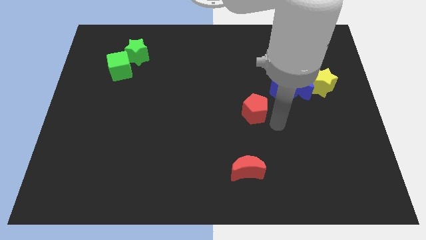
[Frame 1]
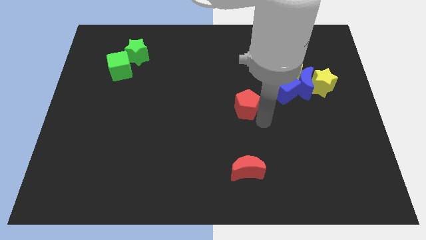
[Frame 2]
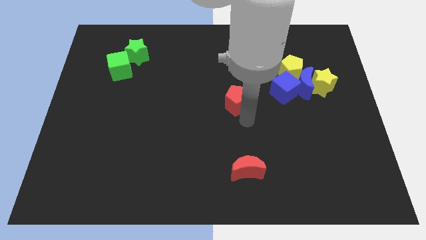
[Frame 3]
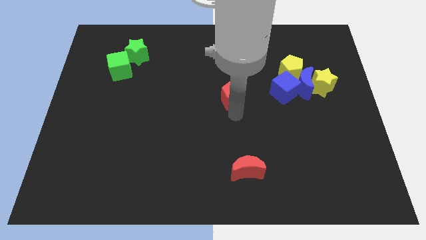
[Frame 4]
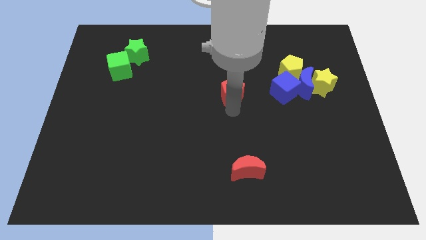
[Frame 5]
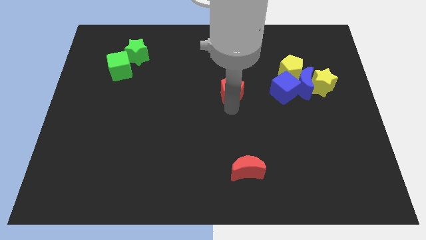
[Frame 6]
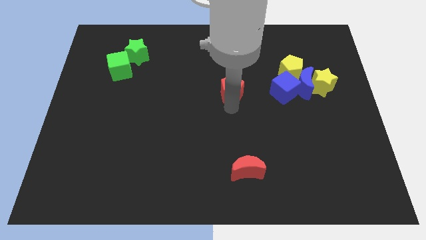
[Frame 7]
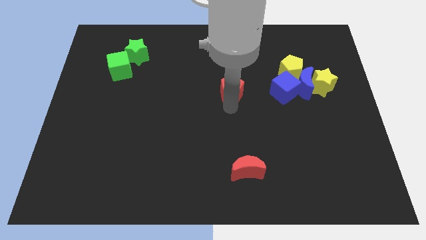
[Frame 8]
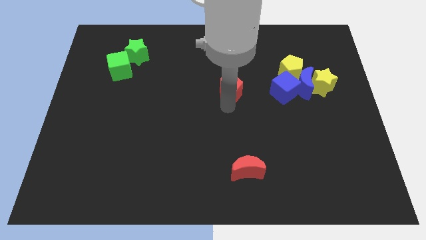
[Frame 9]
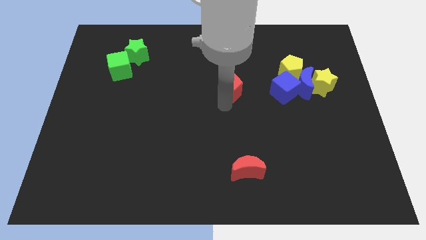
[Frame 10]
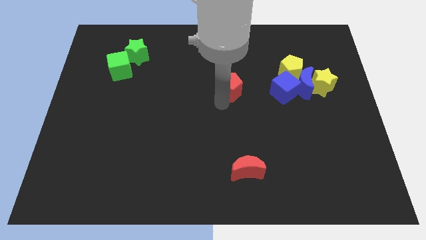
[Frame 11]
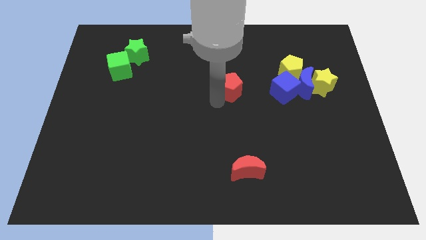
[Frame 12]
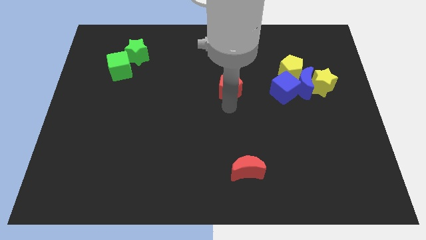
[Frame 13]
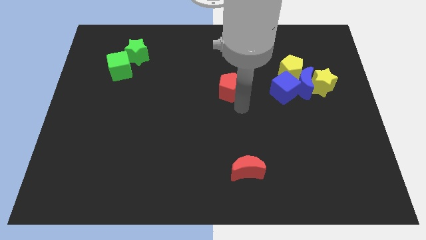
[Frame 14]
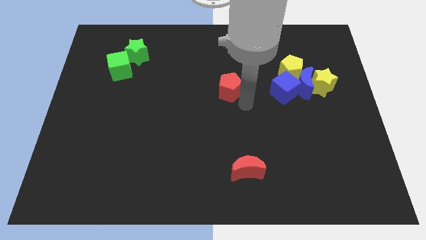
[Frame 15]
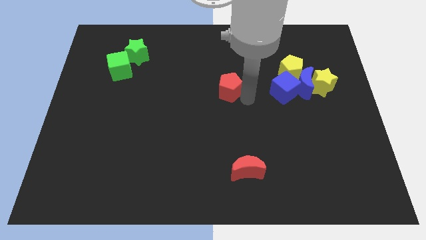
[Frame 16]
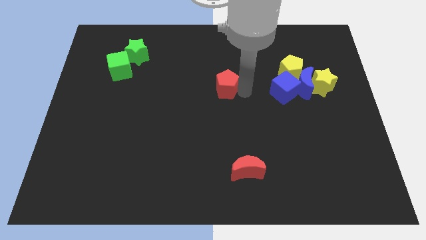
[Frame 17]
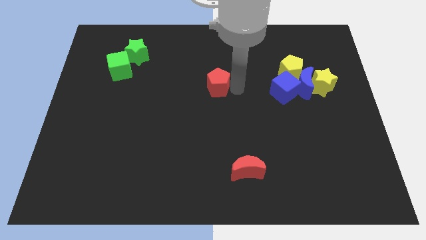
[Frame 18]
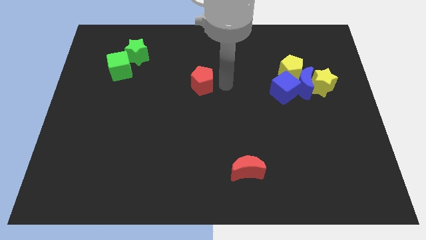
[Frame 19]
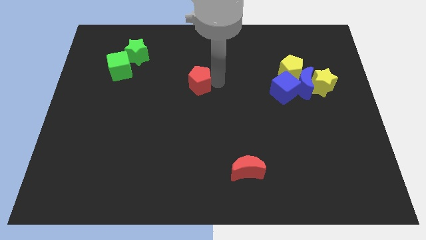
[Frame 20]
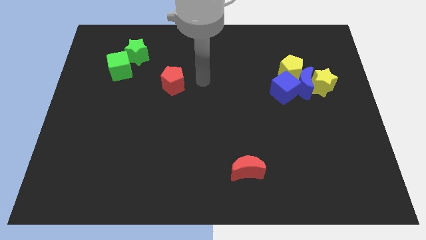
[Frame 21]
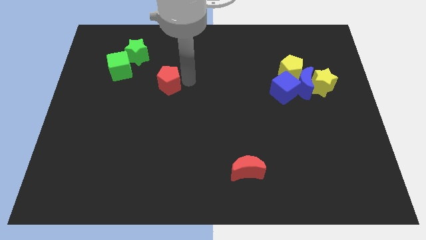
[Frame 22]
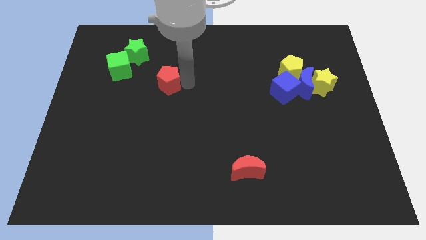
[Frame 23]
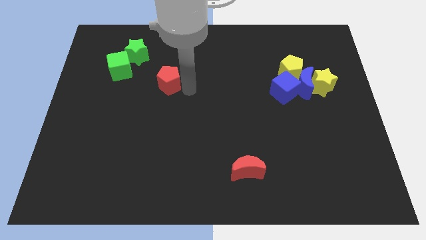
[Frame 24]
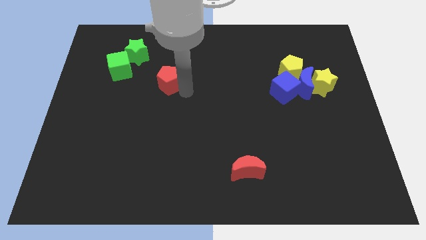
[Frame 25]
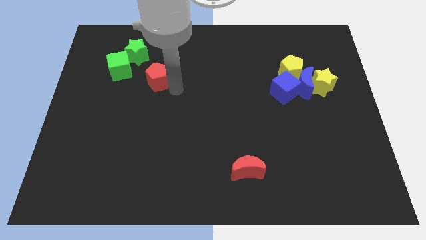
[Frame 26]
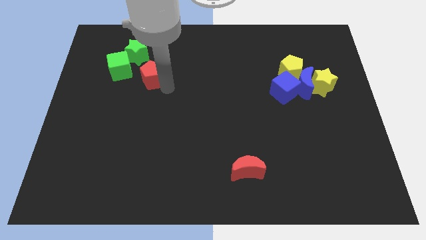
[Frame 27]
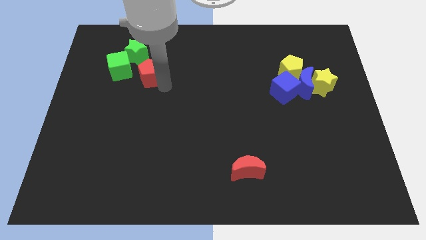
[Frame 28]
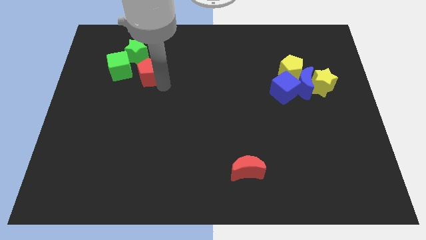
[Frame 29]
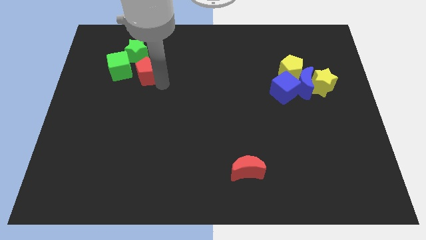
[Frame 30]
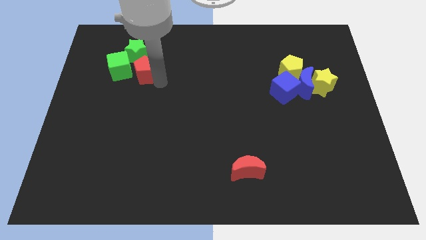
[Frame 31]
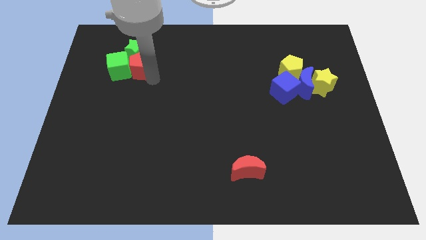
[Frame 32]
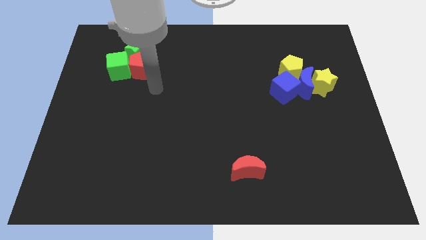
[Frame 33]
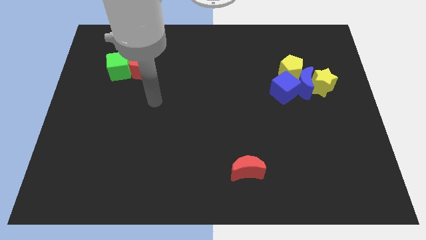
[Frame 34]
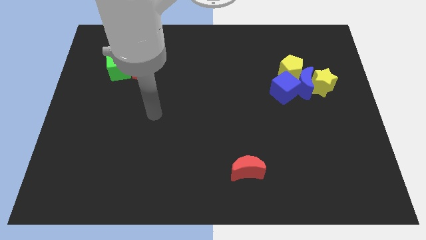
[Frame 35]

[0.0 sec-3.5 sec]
push the red pentagon into the green blocks

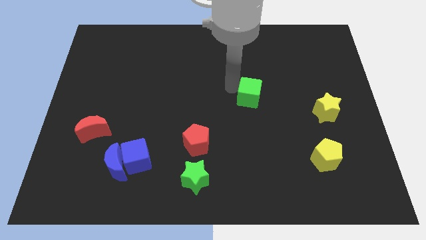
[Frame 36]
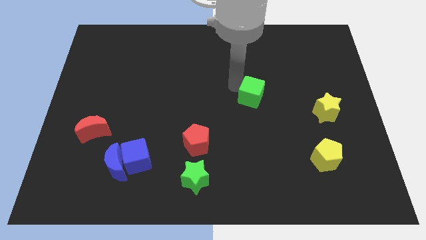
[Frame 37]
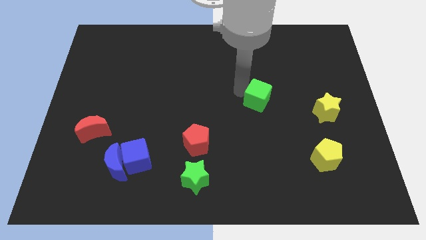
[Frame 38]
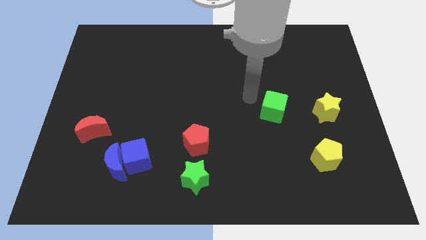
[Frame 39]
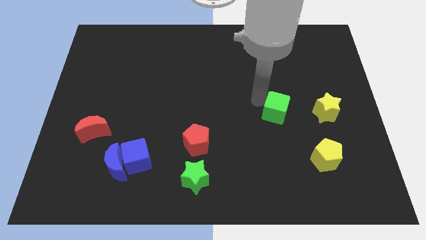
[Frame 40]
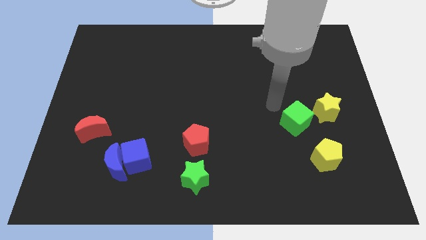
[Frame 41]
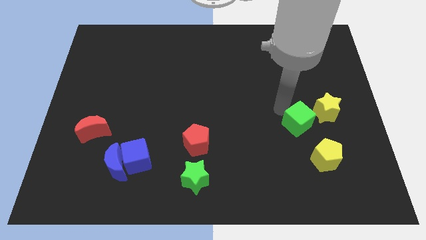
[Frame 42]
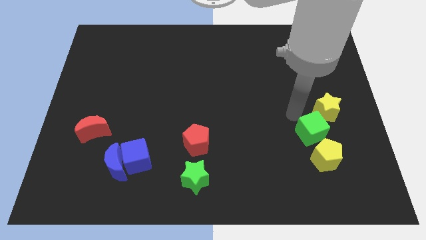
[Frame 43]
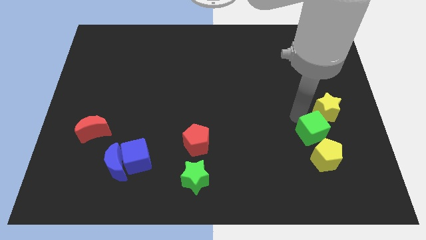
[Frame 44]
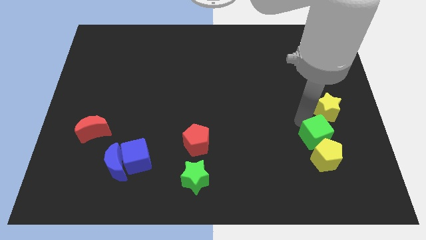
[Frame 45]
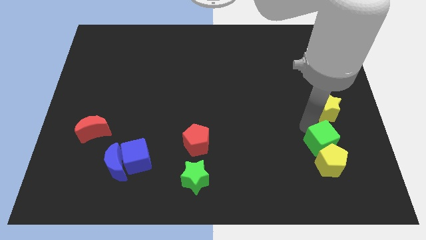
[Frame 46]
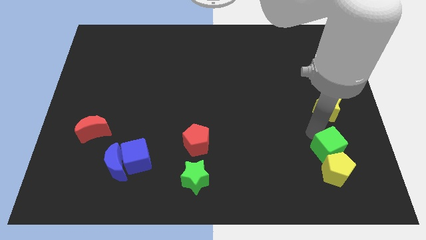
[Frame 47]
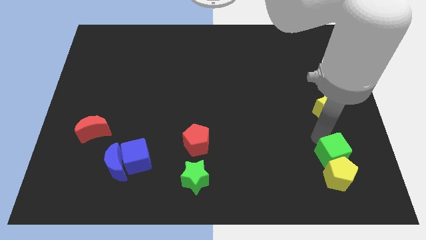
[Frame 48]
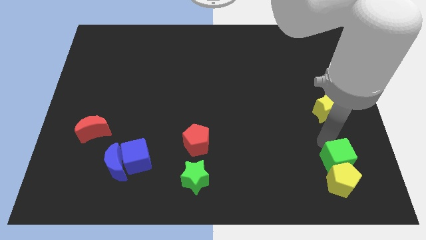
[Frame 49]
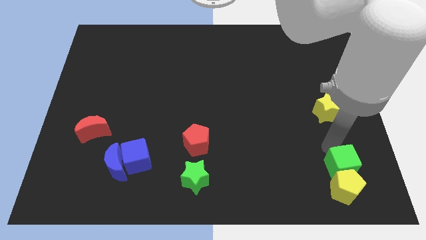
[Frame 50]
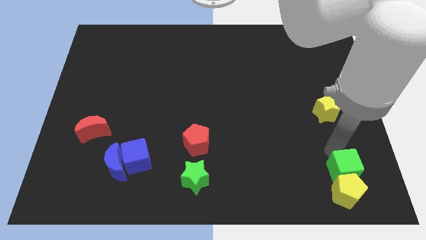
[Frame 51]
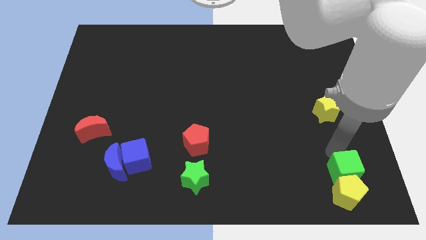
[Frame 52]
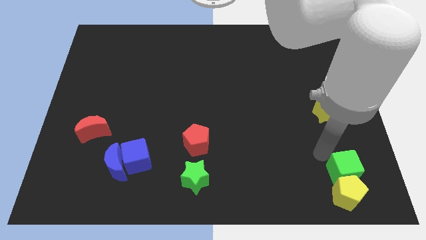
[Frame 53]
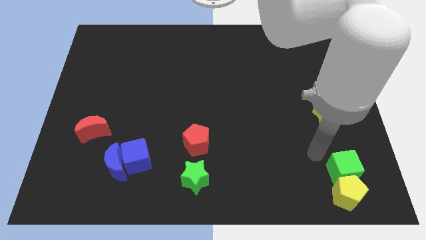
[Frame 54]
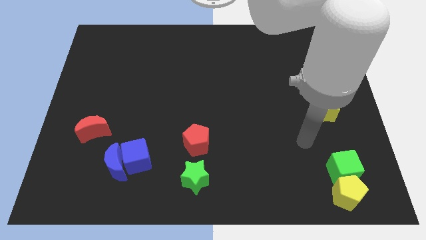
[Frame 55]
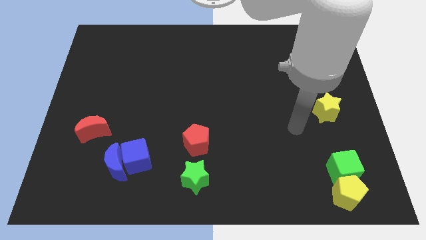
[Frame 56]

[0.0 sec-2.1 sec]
push the green cube and yellow pentagon towards bottom right

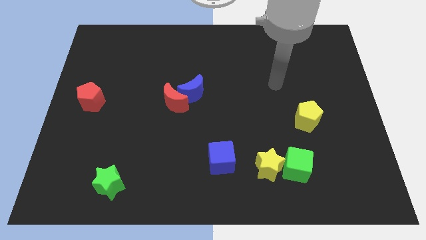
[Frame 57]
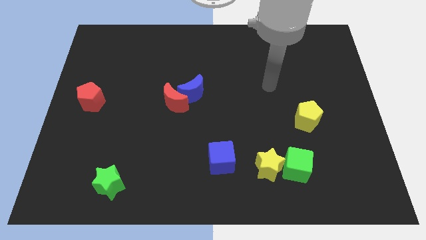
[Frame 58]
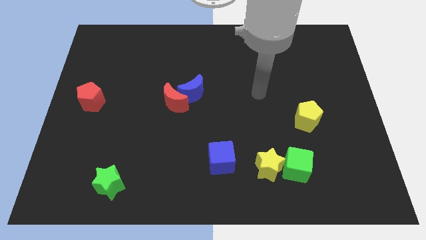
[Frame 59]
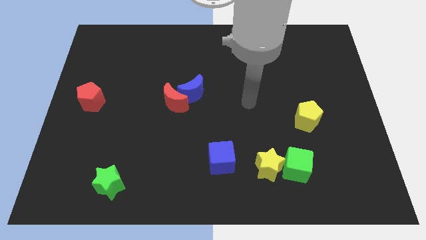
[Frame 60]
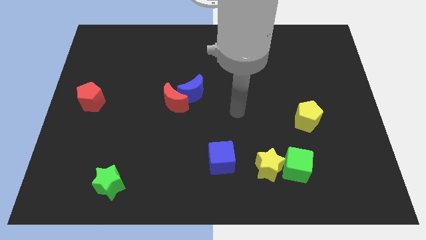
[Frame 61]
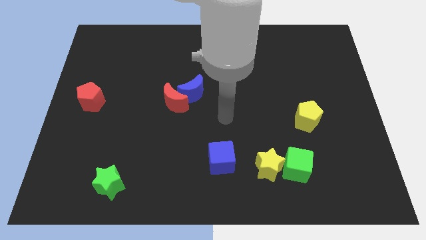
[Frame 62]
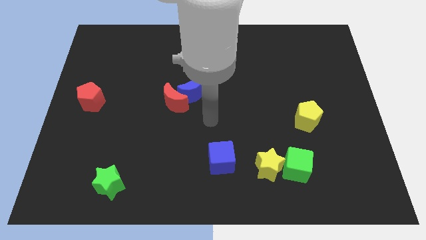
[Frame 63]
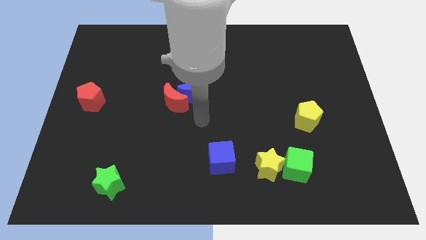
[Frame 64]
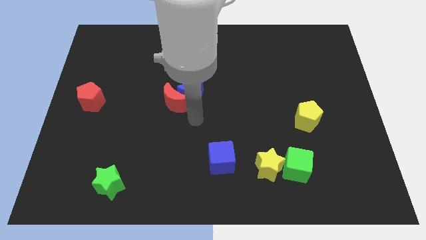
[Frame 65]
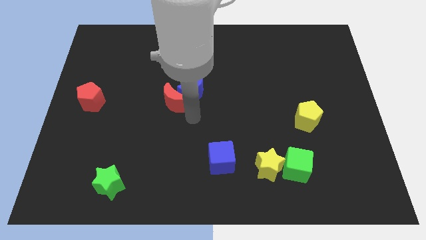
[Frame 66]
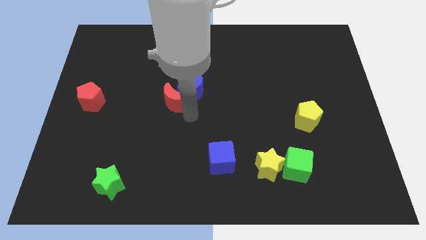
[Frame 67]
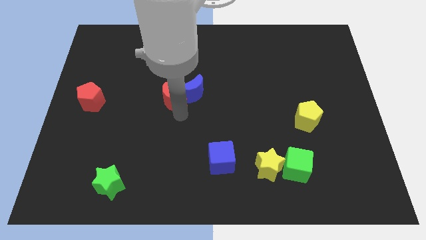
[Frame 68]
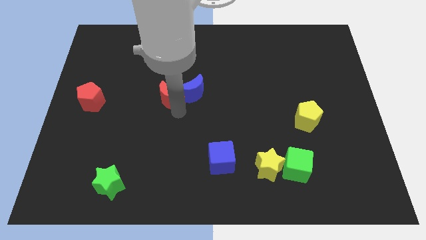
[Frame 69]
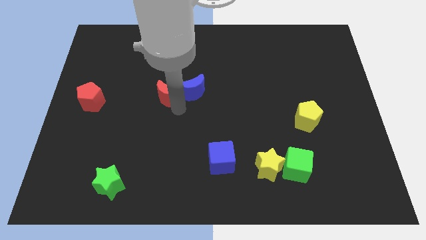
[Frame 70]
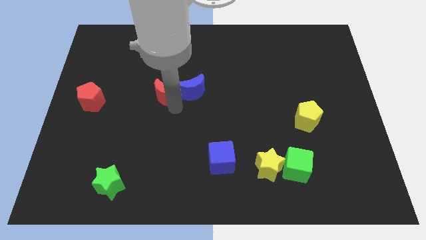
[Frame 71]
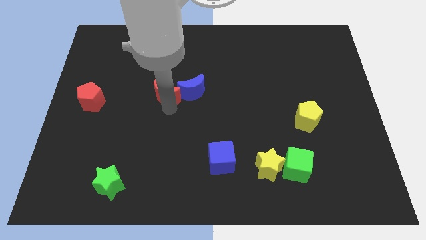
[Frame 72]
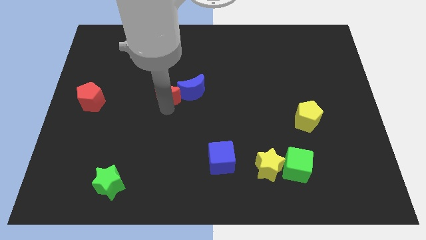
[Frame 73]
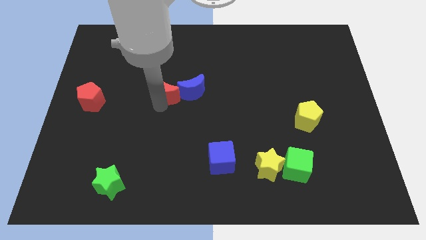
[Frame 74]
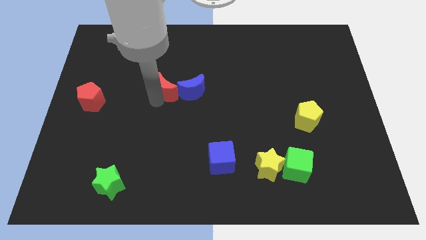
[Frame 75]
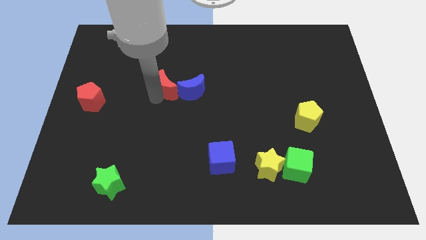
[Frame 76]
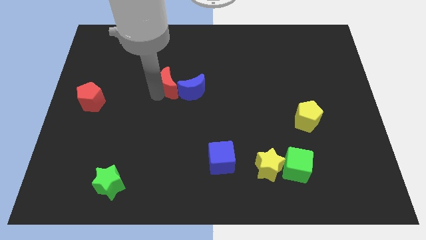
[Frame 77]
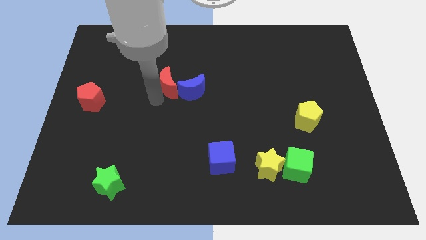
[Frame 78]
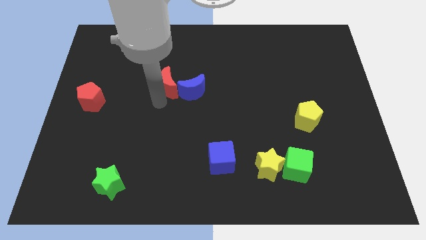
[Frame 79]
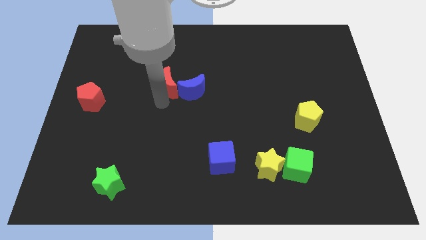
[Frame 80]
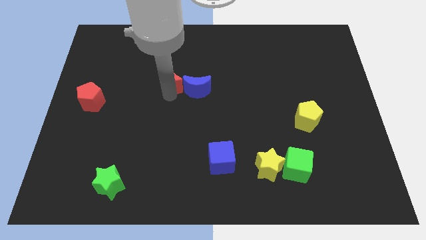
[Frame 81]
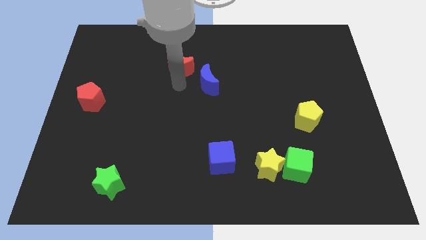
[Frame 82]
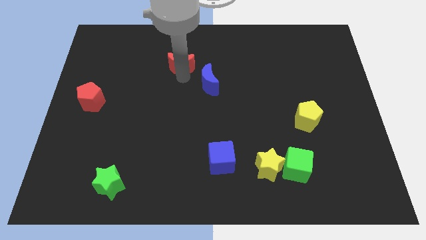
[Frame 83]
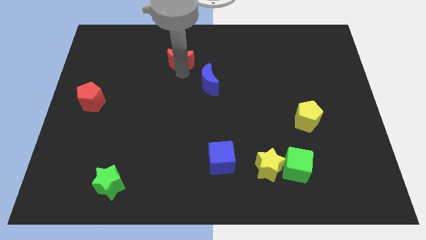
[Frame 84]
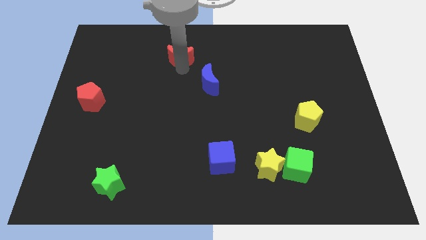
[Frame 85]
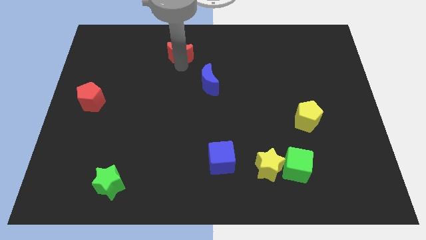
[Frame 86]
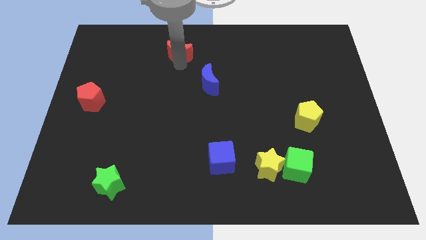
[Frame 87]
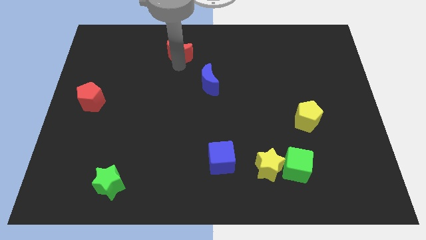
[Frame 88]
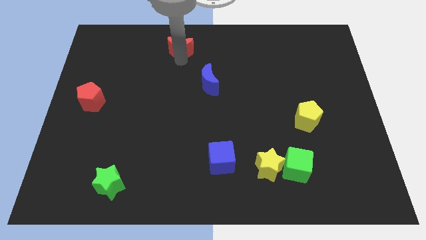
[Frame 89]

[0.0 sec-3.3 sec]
separate the red moon from the blue moon
